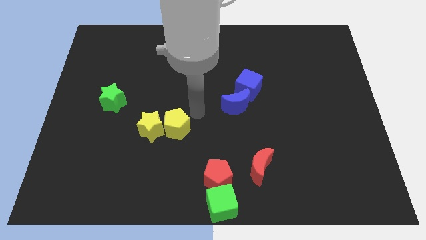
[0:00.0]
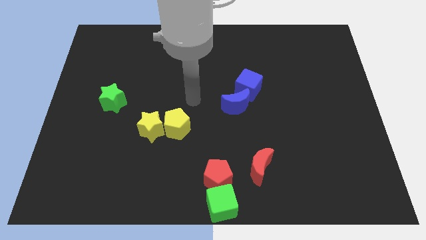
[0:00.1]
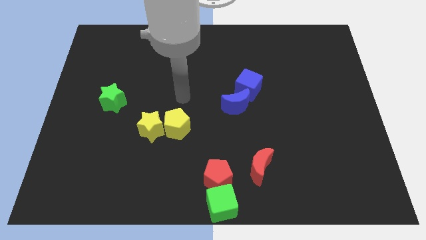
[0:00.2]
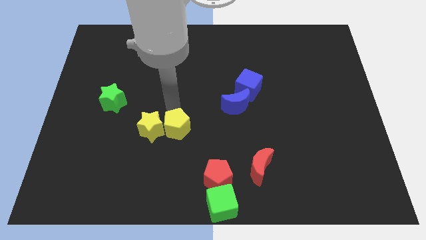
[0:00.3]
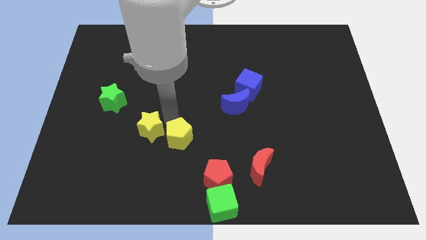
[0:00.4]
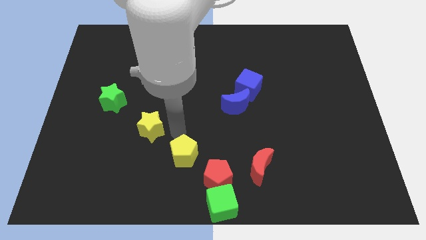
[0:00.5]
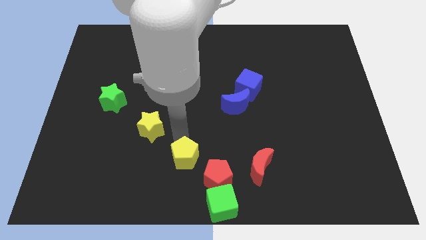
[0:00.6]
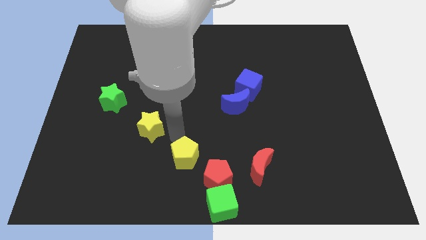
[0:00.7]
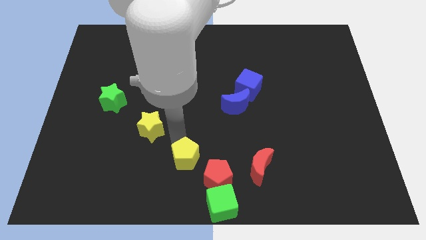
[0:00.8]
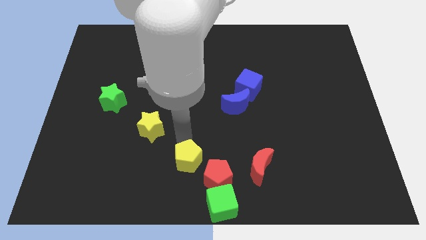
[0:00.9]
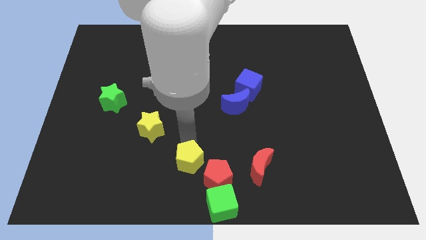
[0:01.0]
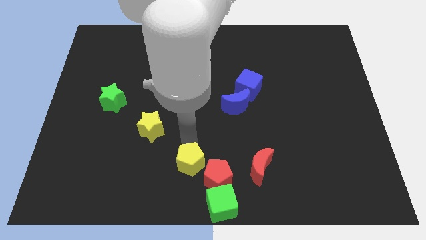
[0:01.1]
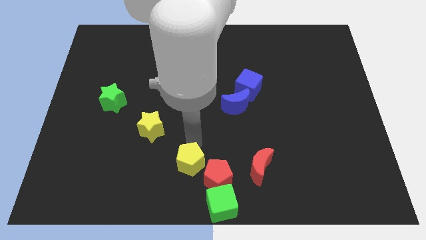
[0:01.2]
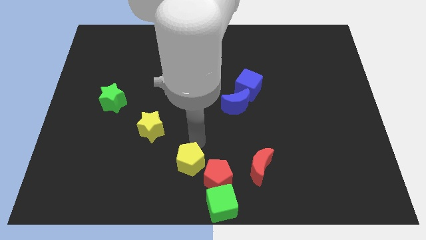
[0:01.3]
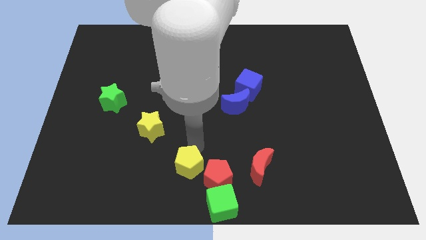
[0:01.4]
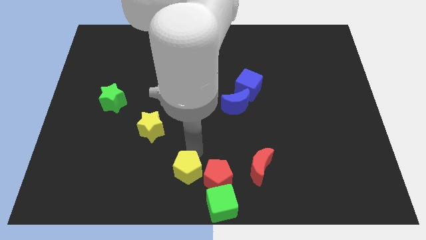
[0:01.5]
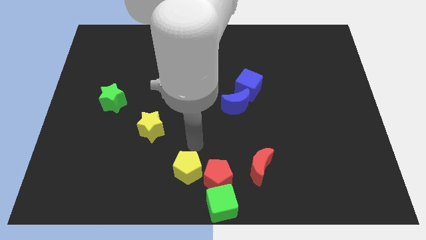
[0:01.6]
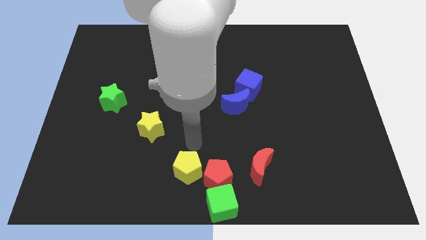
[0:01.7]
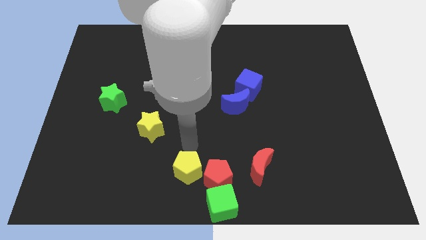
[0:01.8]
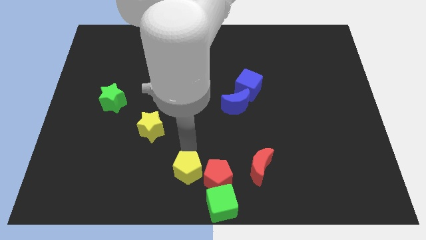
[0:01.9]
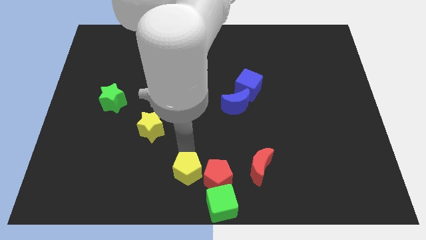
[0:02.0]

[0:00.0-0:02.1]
push the yellow pentagon towards red pentagon

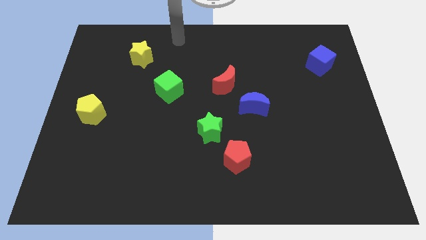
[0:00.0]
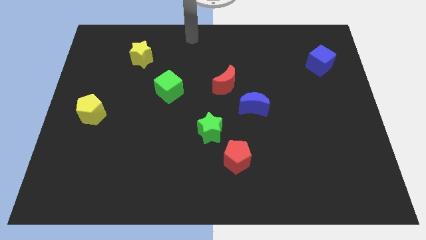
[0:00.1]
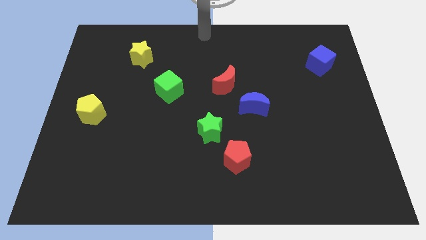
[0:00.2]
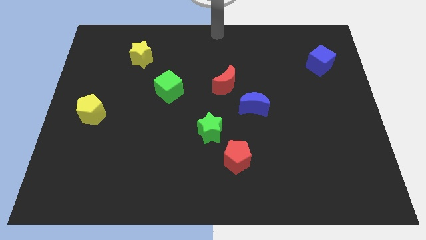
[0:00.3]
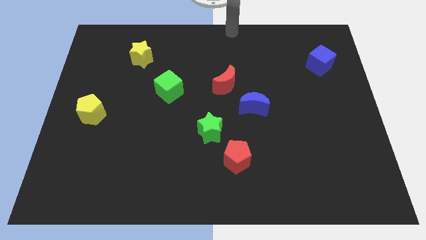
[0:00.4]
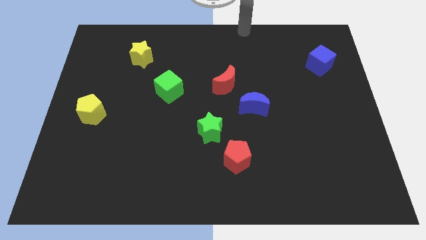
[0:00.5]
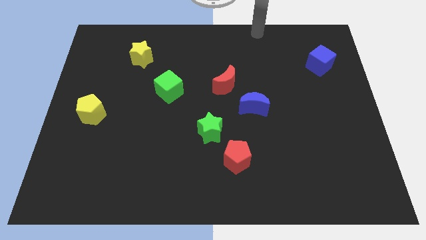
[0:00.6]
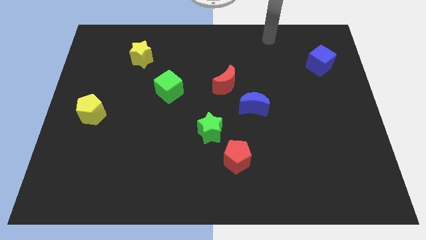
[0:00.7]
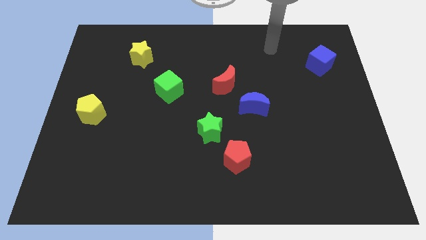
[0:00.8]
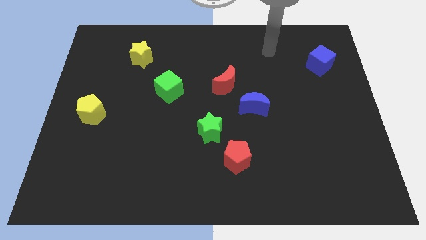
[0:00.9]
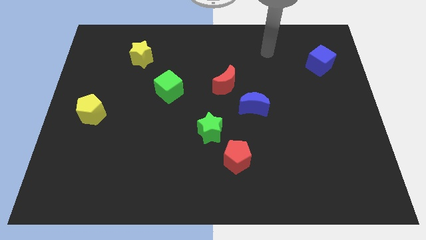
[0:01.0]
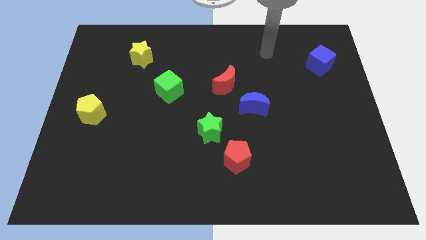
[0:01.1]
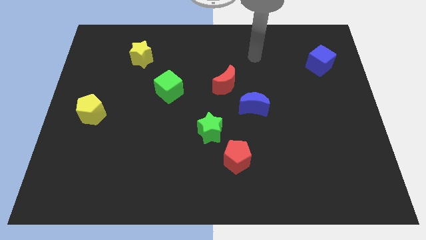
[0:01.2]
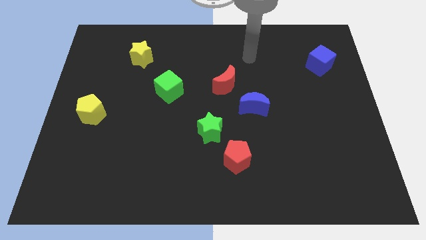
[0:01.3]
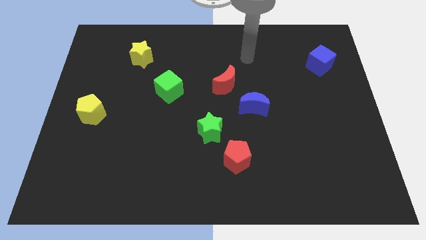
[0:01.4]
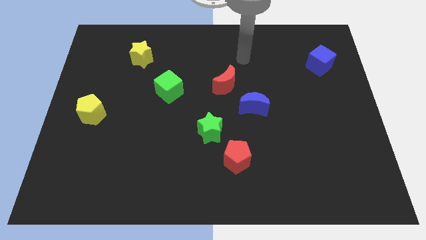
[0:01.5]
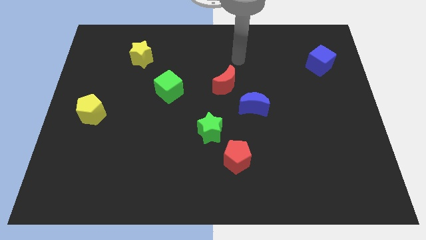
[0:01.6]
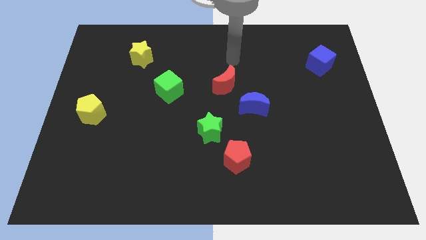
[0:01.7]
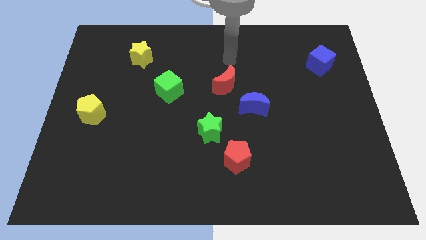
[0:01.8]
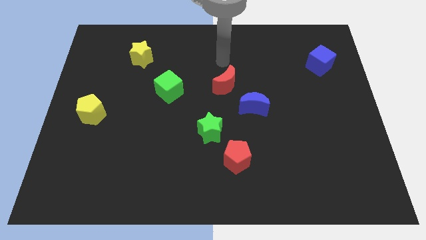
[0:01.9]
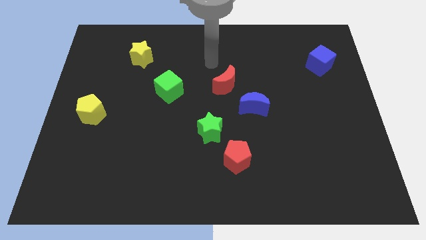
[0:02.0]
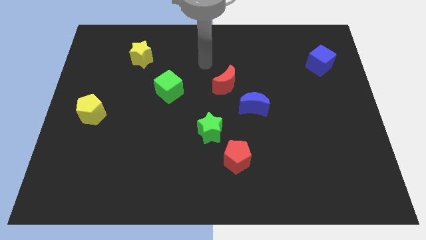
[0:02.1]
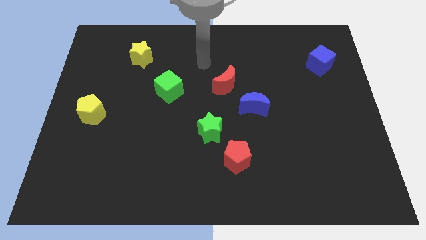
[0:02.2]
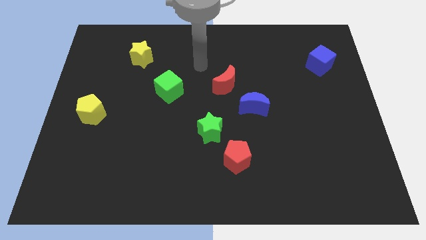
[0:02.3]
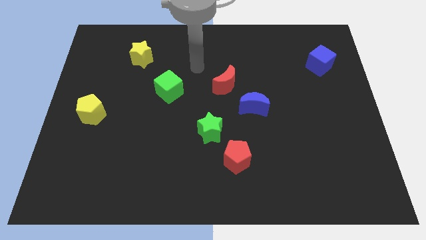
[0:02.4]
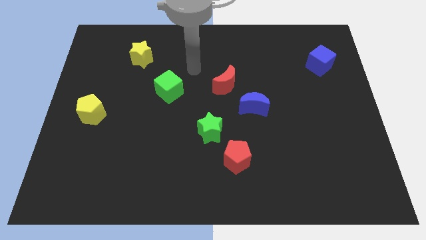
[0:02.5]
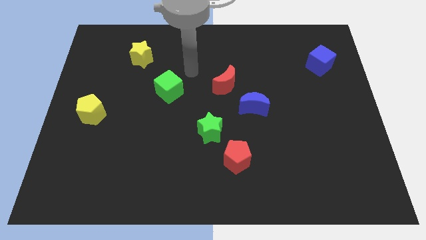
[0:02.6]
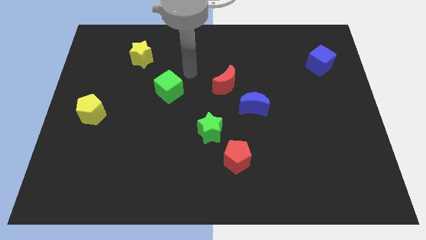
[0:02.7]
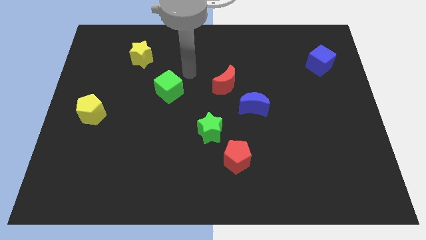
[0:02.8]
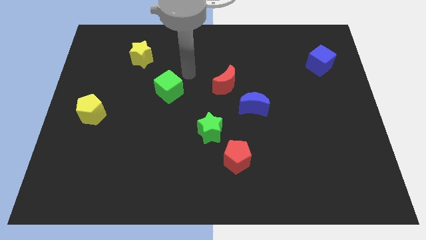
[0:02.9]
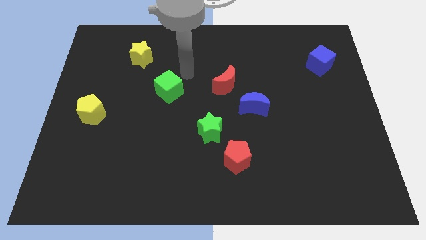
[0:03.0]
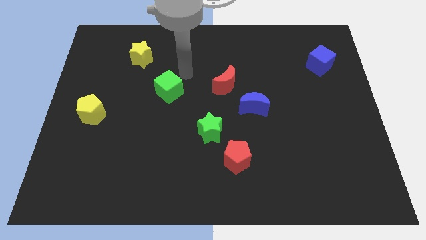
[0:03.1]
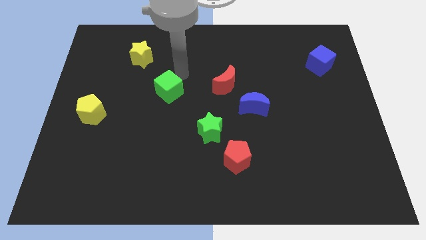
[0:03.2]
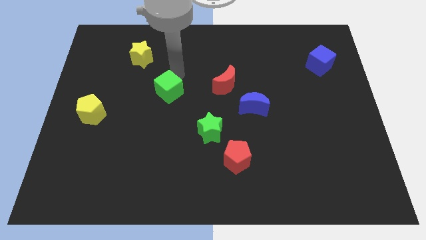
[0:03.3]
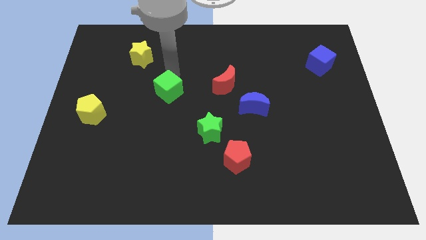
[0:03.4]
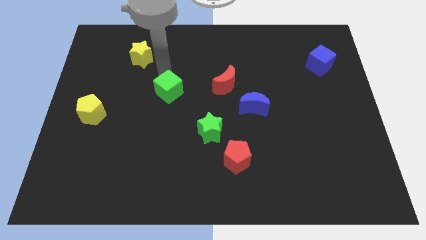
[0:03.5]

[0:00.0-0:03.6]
point the arm above the green cube

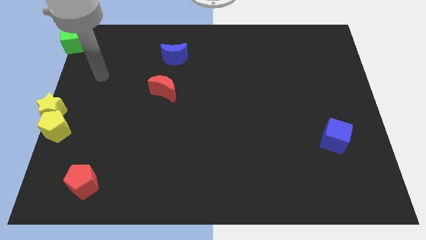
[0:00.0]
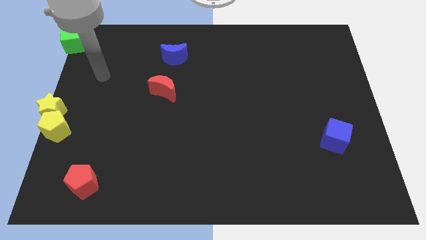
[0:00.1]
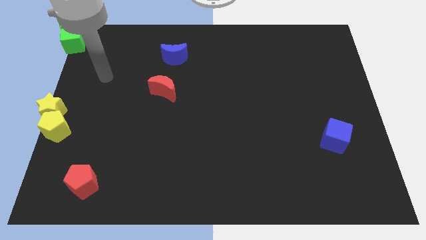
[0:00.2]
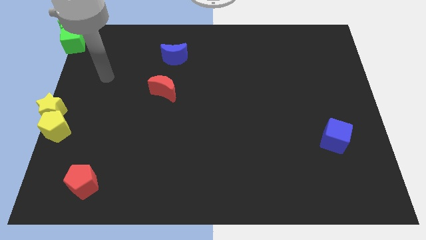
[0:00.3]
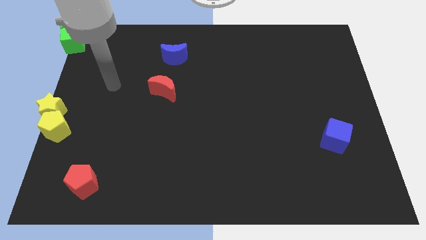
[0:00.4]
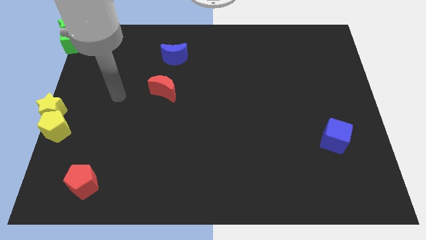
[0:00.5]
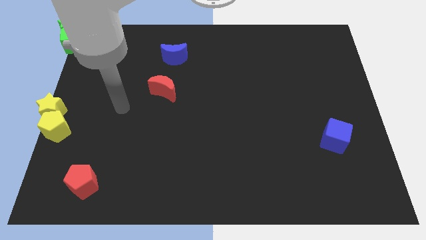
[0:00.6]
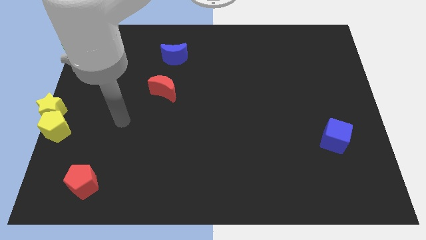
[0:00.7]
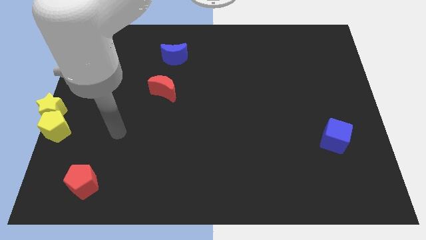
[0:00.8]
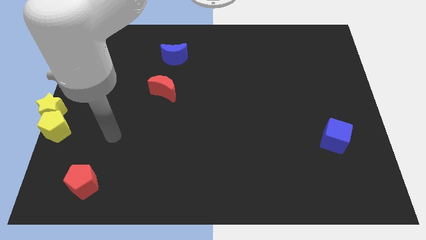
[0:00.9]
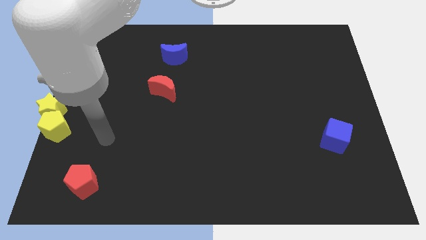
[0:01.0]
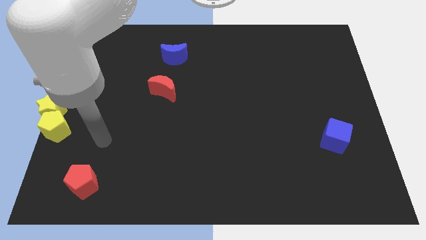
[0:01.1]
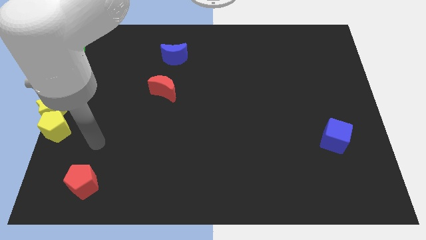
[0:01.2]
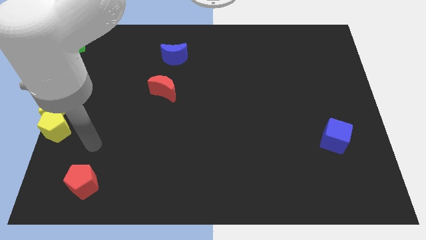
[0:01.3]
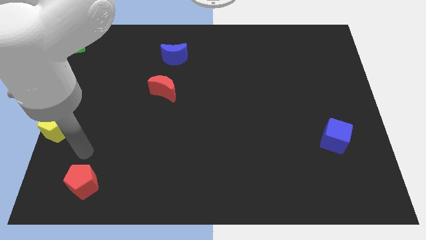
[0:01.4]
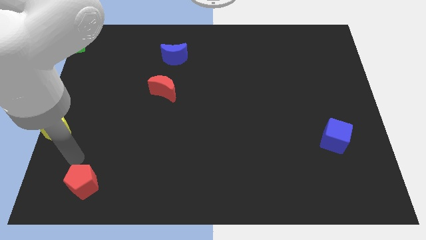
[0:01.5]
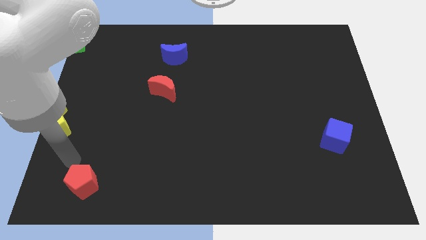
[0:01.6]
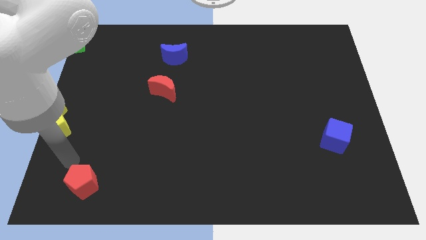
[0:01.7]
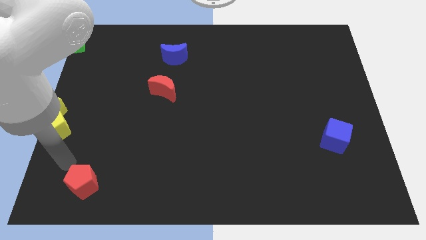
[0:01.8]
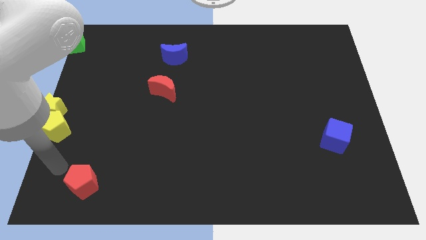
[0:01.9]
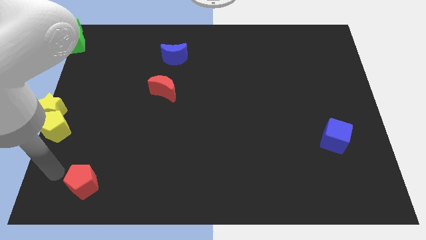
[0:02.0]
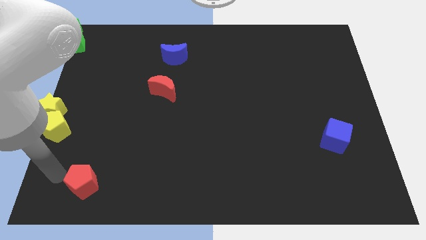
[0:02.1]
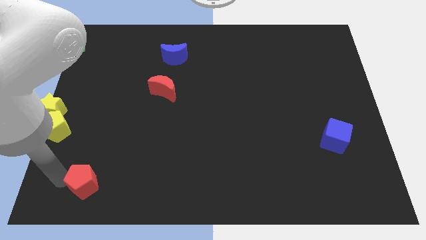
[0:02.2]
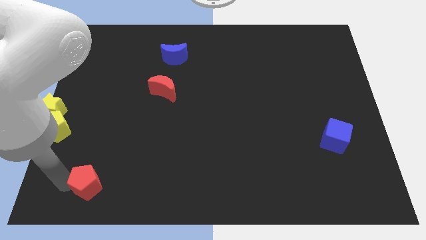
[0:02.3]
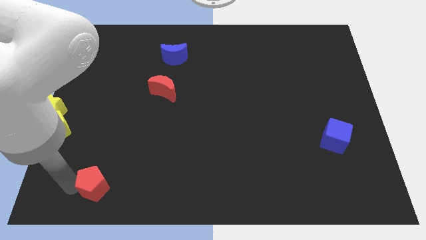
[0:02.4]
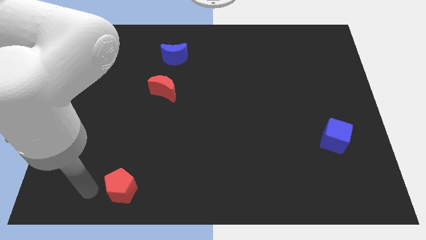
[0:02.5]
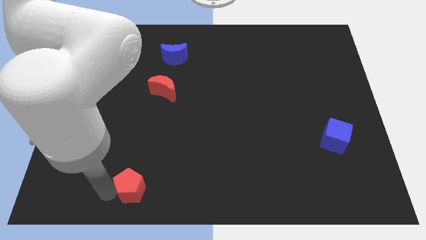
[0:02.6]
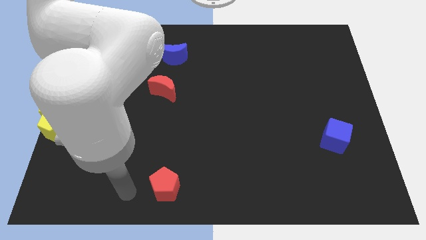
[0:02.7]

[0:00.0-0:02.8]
move red pentagon below red crescent

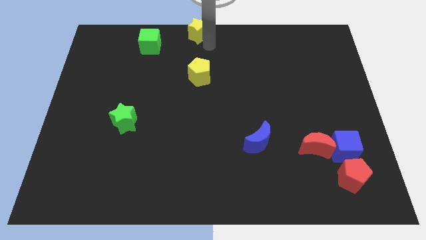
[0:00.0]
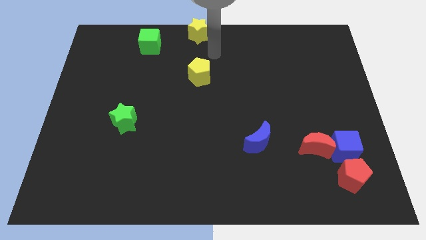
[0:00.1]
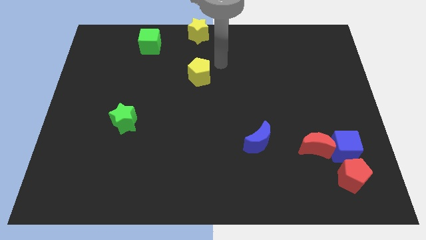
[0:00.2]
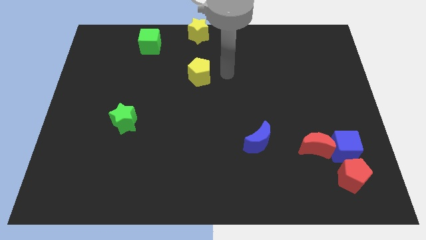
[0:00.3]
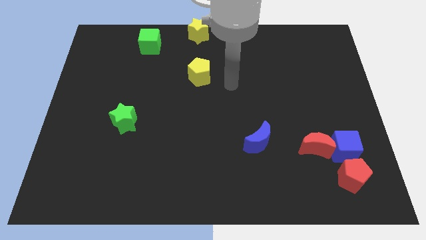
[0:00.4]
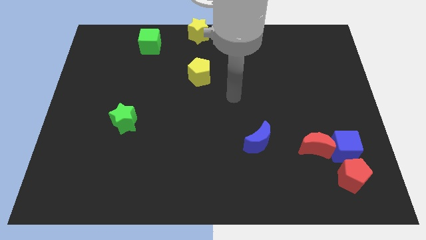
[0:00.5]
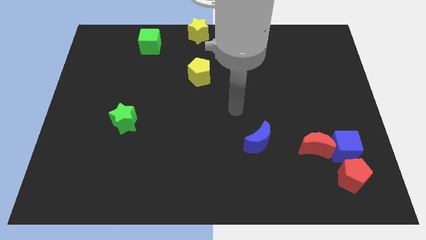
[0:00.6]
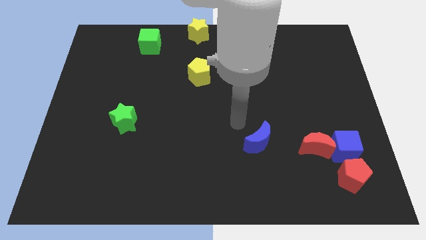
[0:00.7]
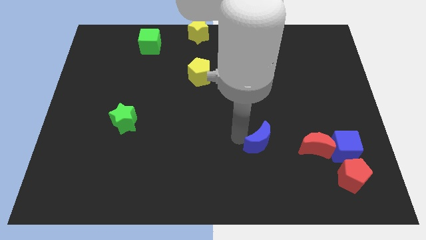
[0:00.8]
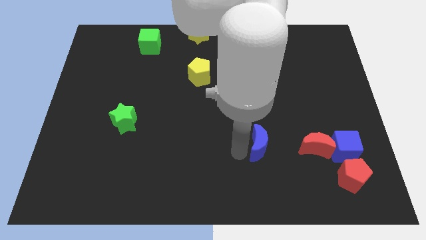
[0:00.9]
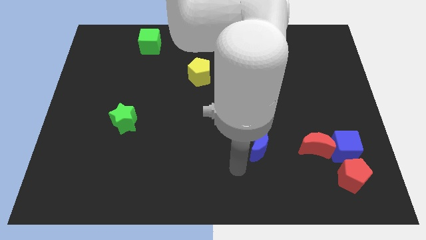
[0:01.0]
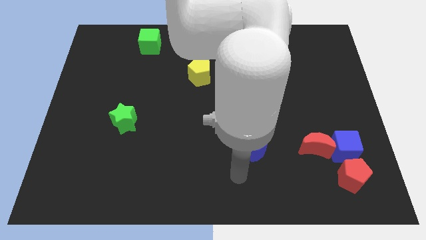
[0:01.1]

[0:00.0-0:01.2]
move the arm away from the yellow star
